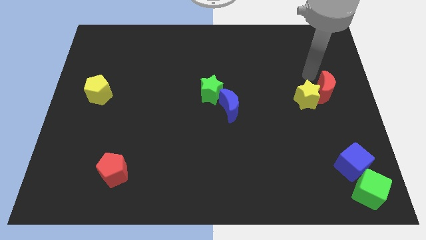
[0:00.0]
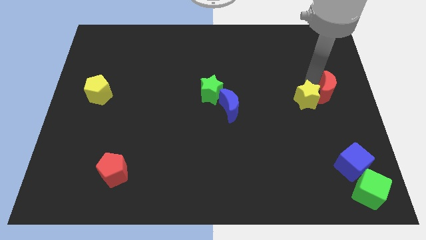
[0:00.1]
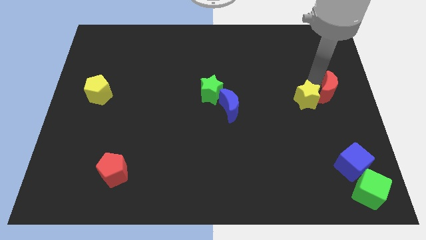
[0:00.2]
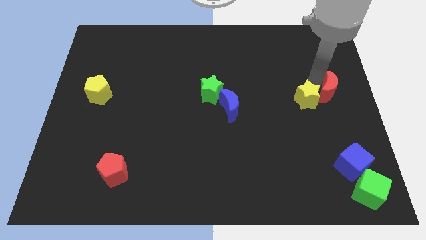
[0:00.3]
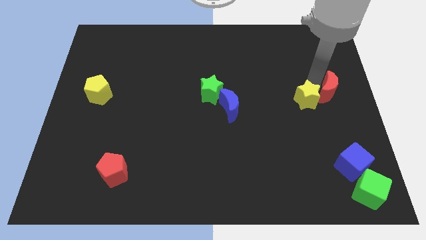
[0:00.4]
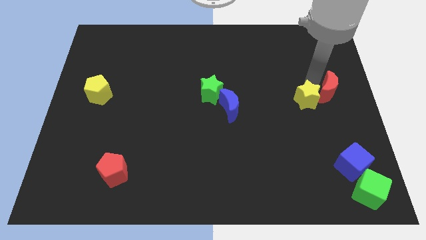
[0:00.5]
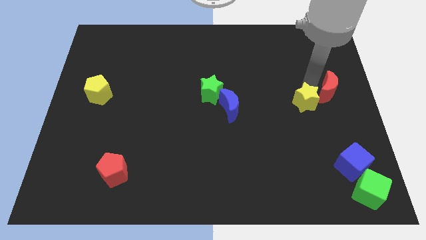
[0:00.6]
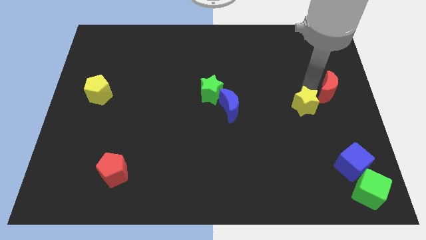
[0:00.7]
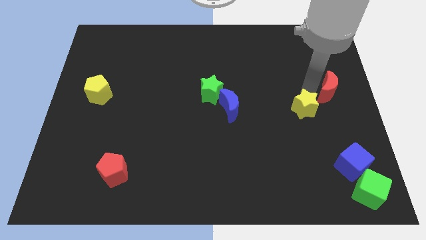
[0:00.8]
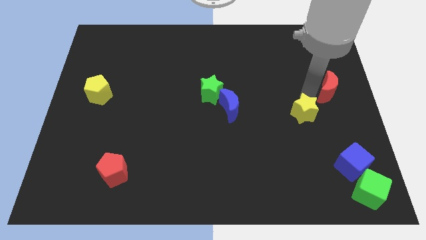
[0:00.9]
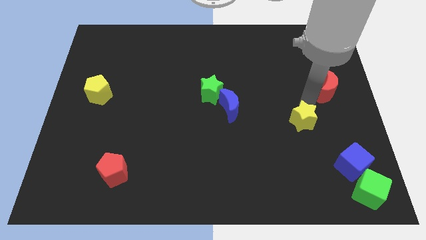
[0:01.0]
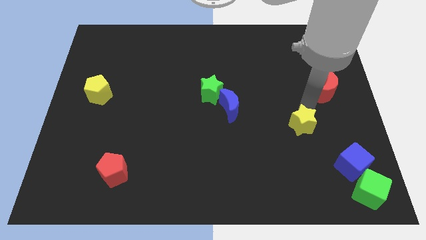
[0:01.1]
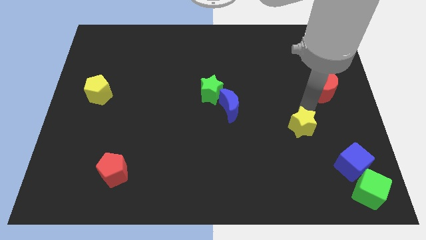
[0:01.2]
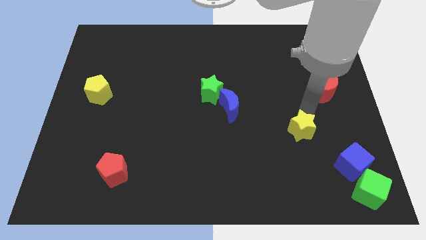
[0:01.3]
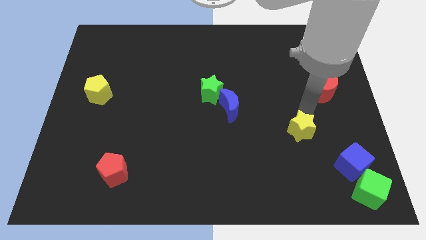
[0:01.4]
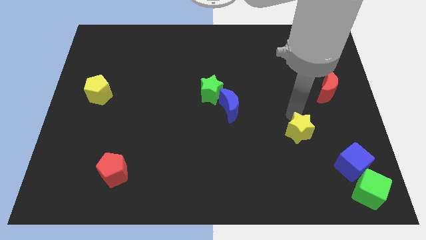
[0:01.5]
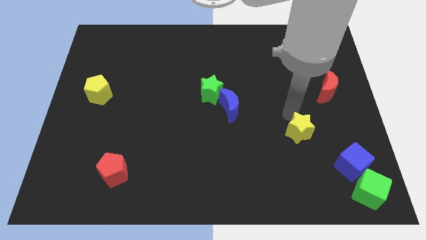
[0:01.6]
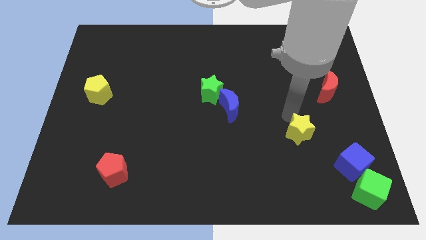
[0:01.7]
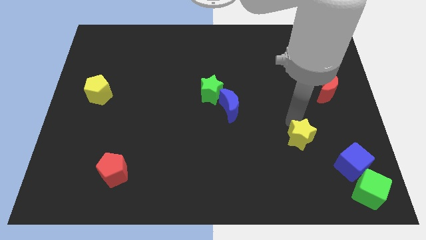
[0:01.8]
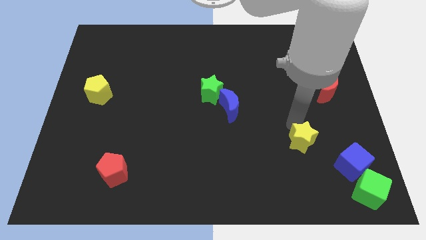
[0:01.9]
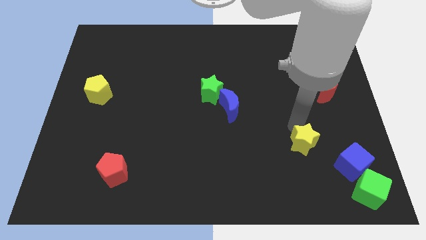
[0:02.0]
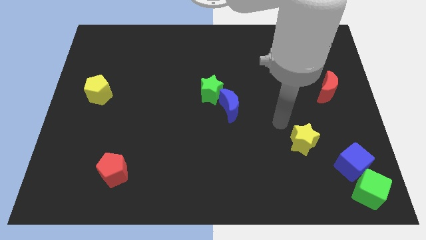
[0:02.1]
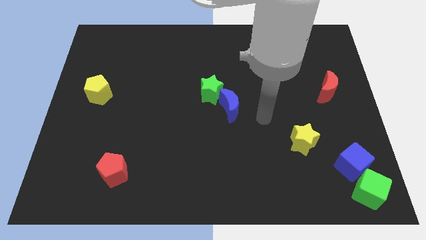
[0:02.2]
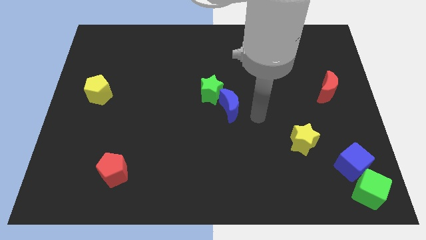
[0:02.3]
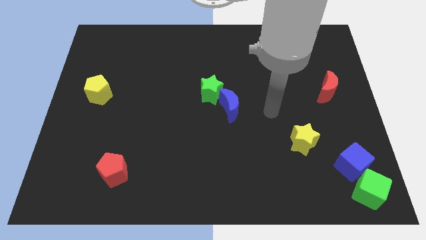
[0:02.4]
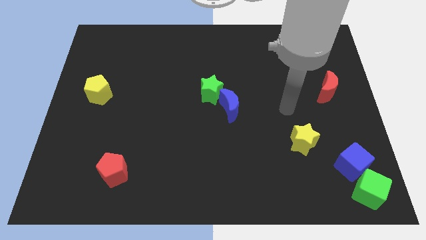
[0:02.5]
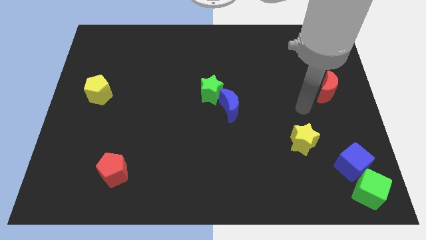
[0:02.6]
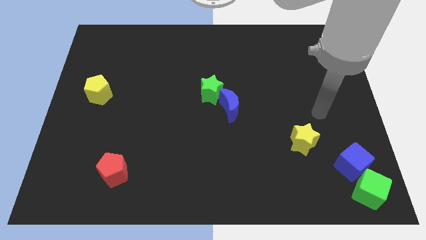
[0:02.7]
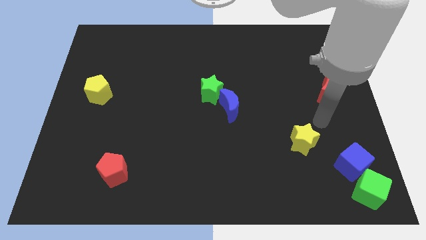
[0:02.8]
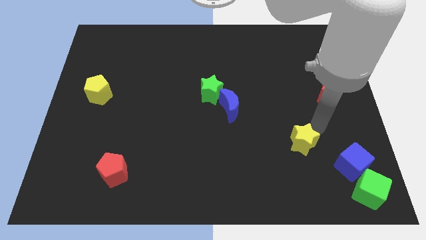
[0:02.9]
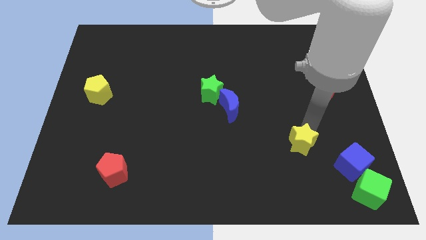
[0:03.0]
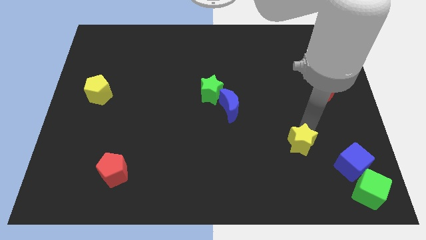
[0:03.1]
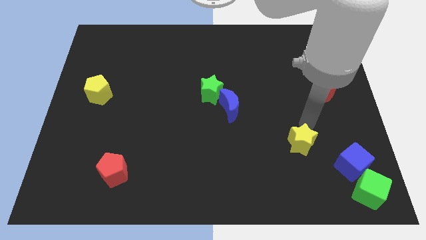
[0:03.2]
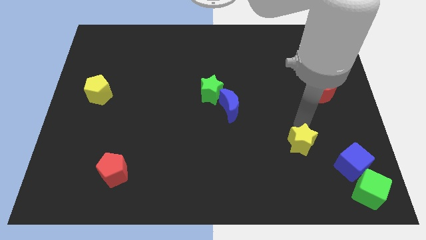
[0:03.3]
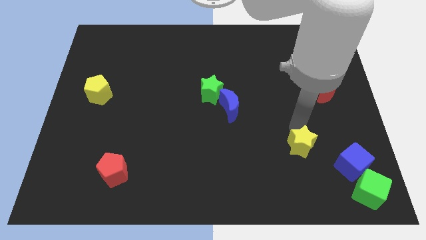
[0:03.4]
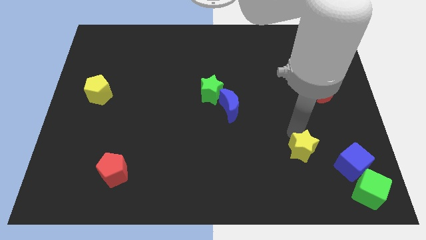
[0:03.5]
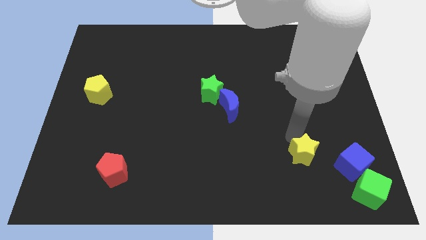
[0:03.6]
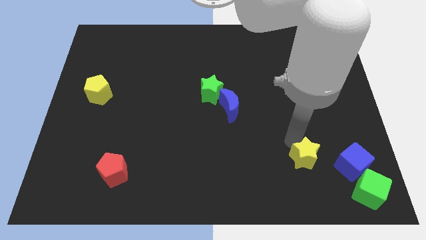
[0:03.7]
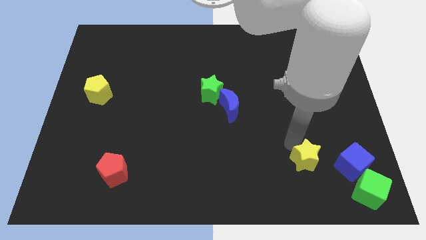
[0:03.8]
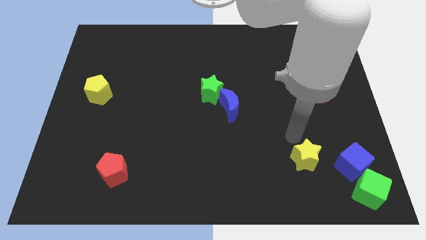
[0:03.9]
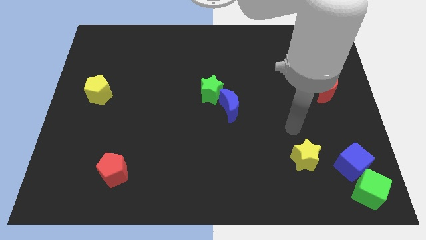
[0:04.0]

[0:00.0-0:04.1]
push yellow star to the left of blue cube

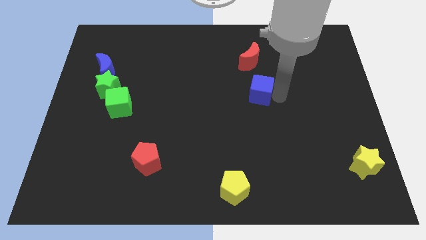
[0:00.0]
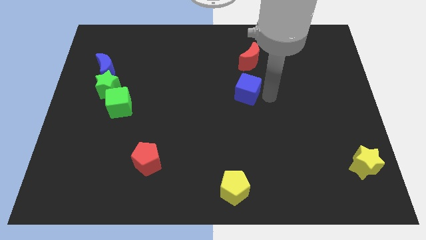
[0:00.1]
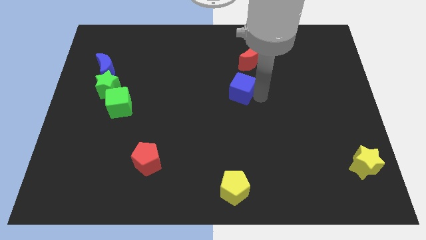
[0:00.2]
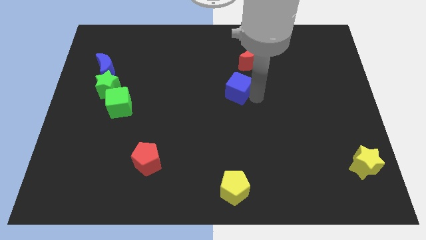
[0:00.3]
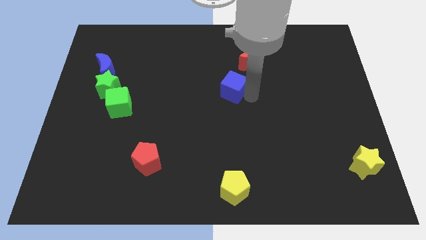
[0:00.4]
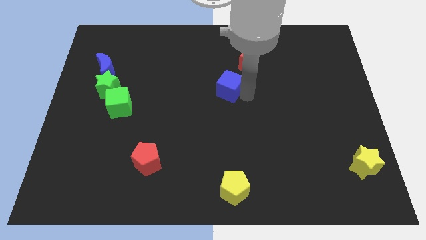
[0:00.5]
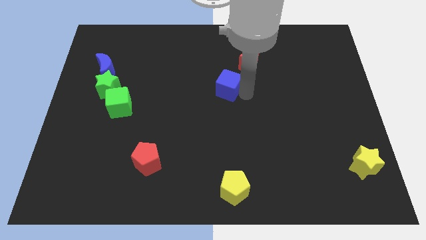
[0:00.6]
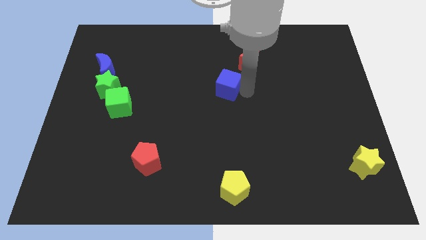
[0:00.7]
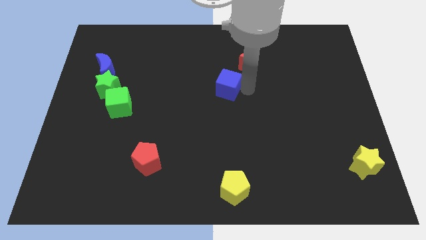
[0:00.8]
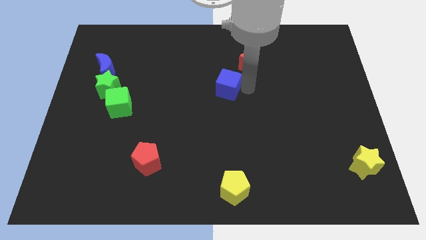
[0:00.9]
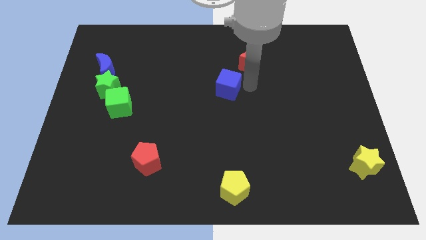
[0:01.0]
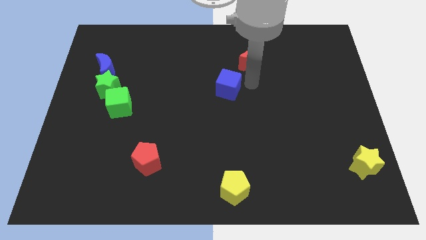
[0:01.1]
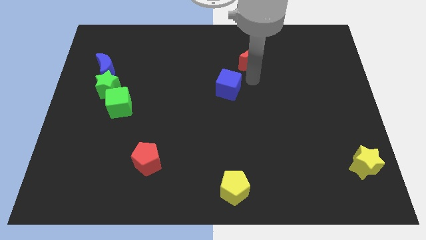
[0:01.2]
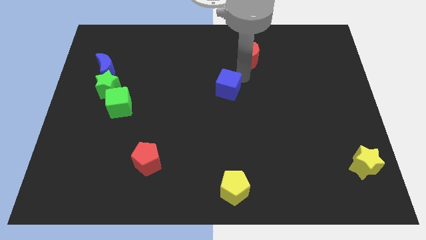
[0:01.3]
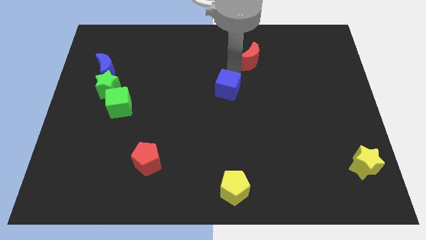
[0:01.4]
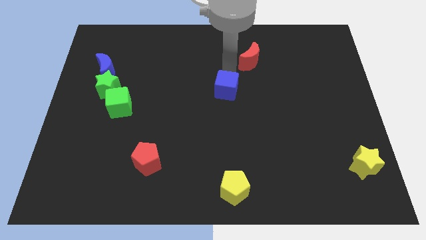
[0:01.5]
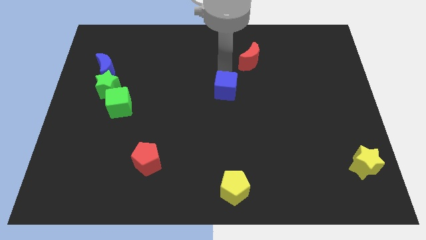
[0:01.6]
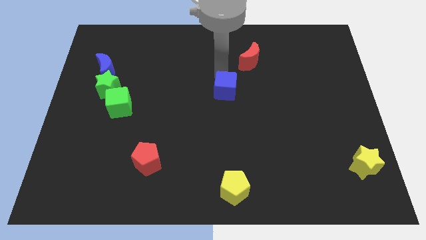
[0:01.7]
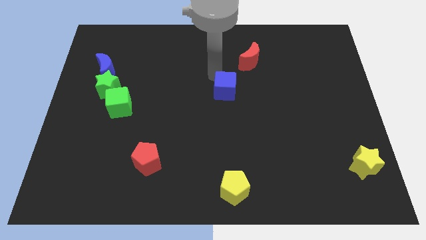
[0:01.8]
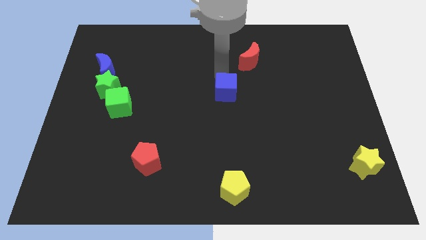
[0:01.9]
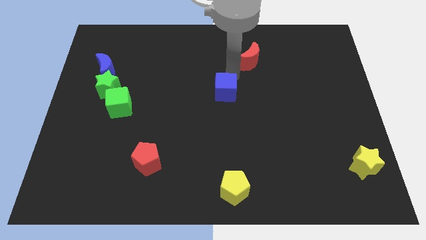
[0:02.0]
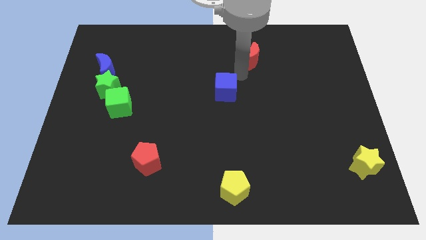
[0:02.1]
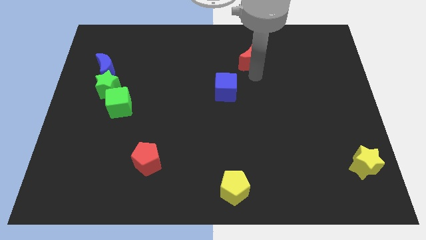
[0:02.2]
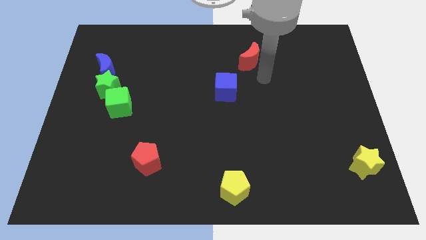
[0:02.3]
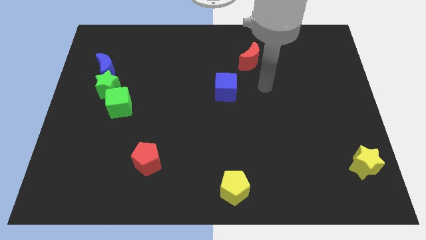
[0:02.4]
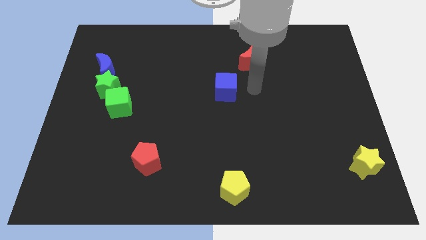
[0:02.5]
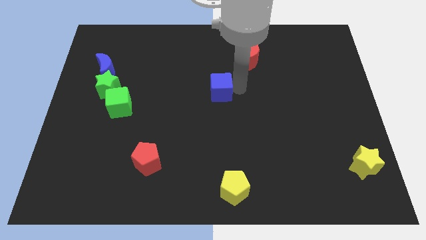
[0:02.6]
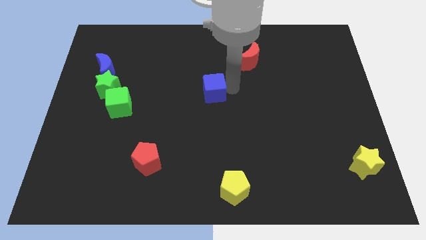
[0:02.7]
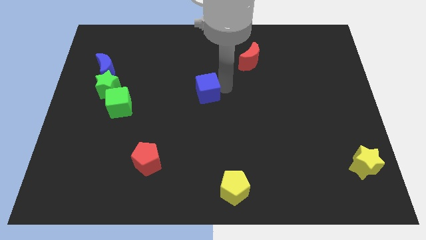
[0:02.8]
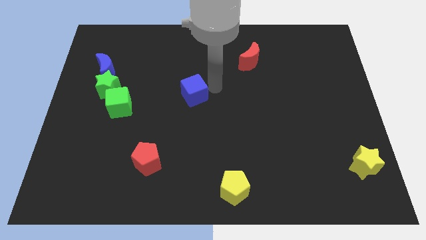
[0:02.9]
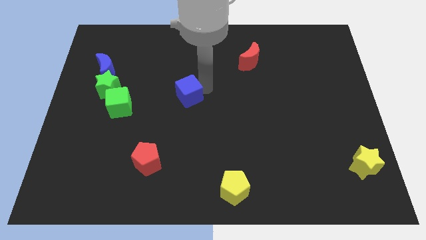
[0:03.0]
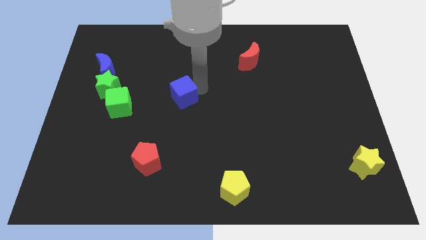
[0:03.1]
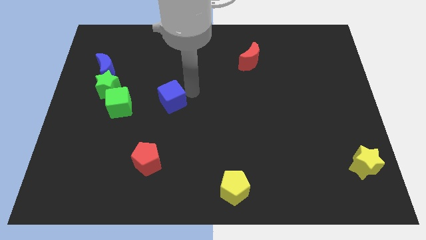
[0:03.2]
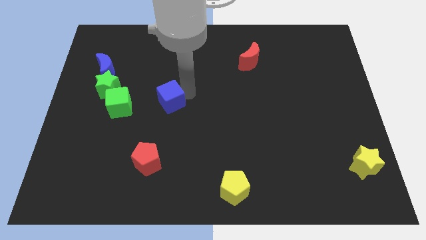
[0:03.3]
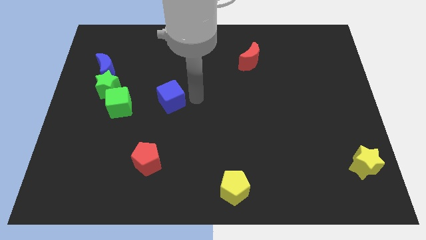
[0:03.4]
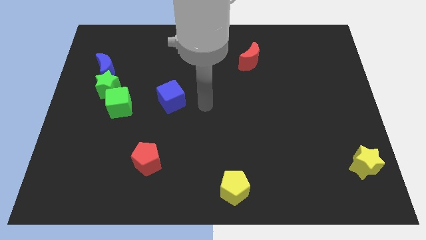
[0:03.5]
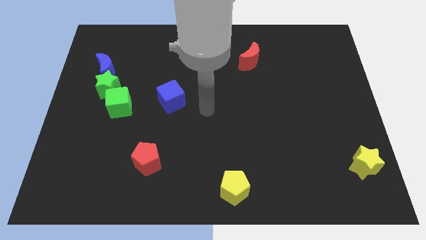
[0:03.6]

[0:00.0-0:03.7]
move the blue cube to the right of the green cube

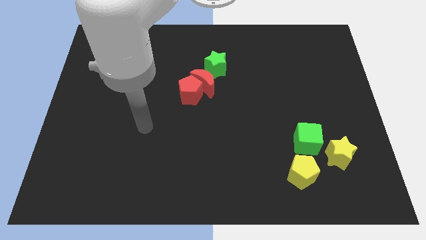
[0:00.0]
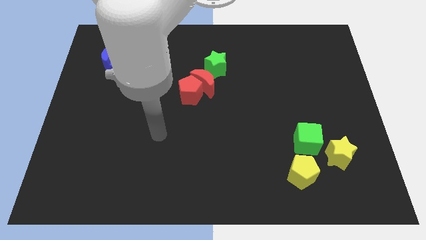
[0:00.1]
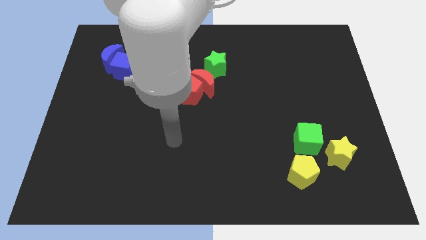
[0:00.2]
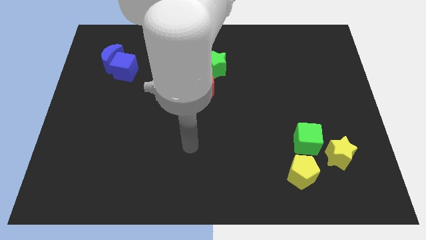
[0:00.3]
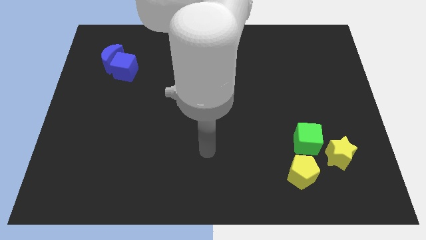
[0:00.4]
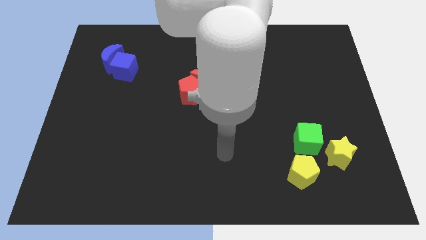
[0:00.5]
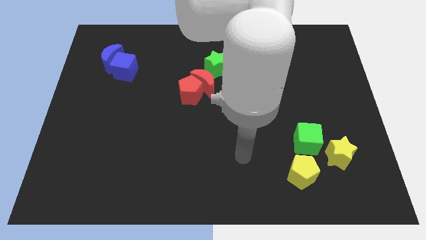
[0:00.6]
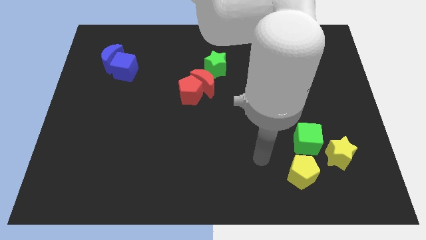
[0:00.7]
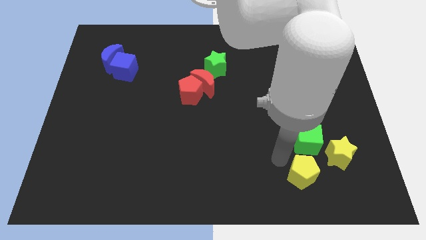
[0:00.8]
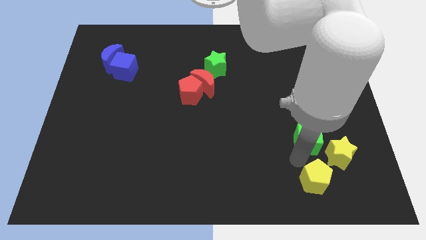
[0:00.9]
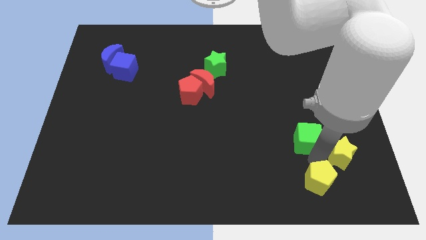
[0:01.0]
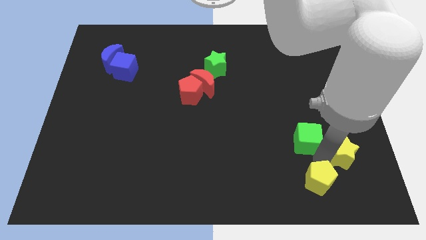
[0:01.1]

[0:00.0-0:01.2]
slide the yellow pentagon slightly to the right
